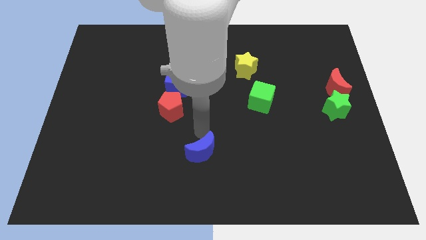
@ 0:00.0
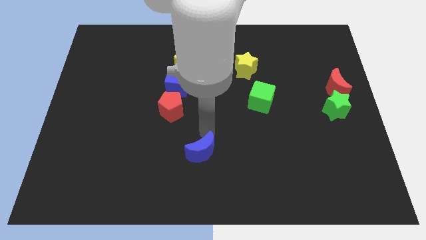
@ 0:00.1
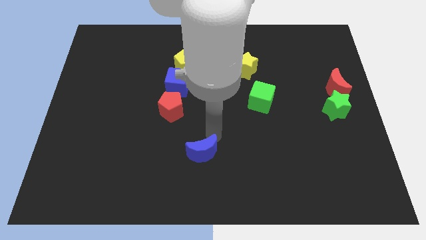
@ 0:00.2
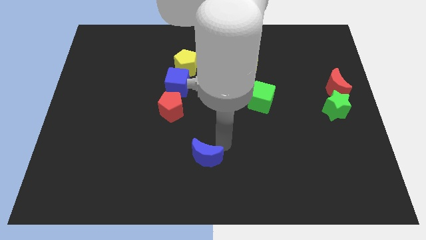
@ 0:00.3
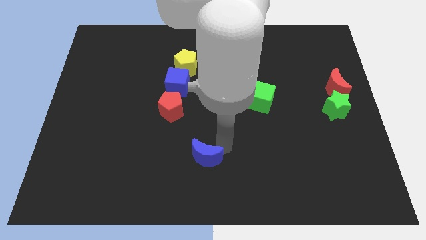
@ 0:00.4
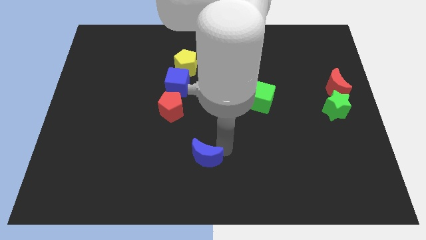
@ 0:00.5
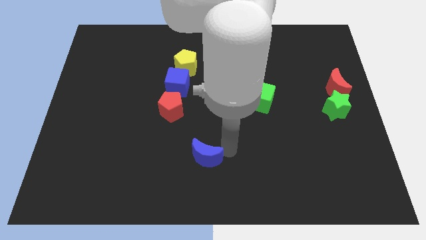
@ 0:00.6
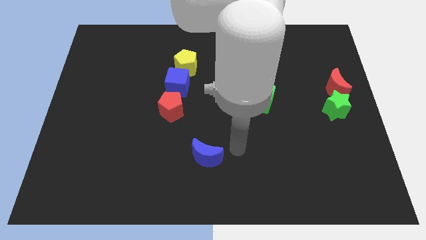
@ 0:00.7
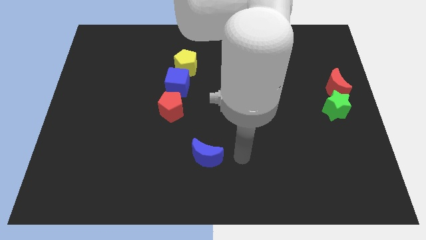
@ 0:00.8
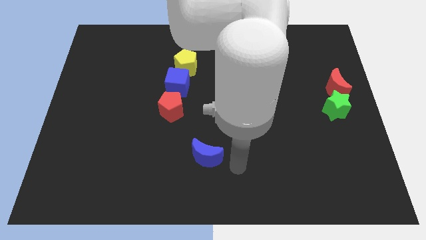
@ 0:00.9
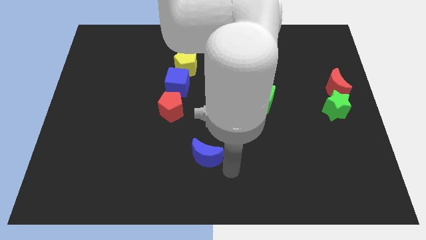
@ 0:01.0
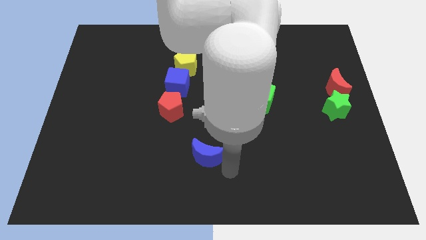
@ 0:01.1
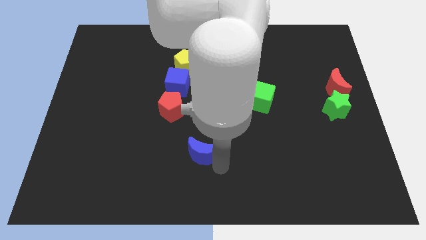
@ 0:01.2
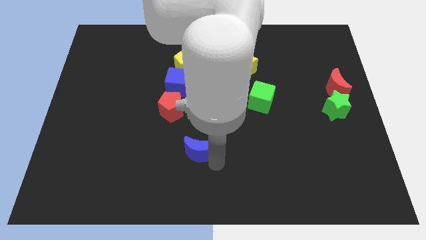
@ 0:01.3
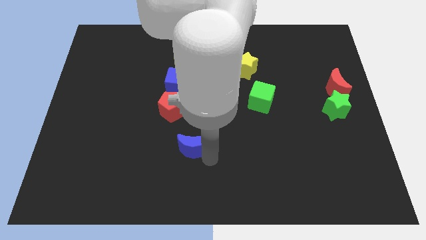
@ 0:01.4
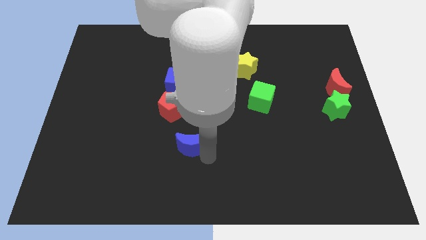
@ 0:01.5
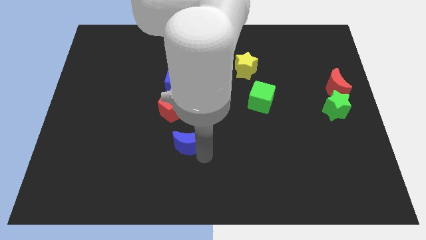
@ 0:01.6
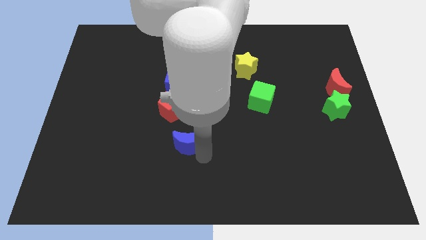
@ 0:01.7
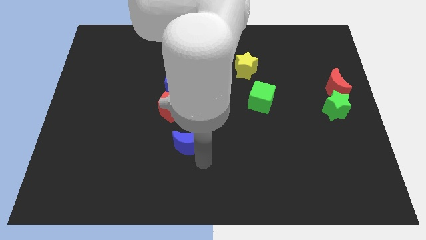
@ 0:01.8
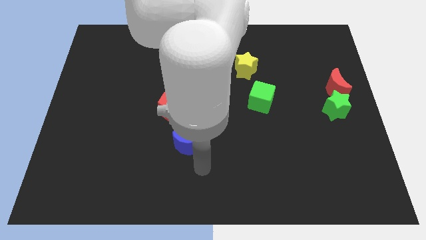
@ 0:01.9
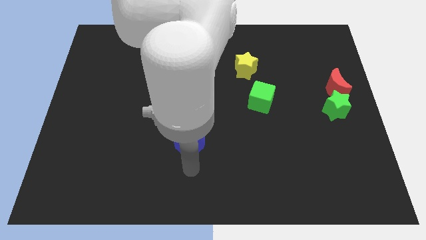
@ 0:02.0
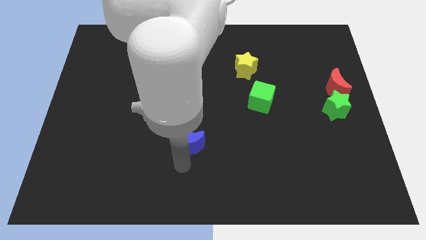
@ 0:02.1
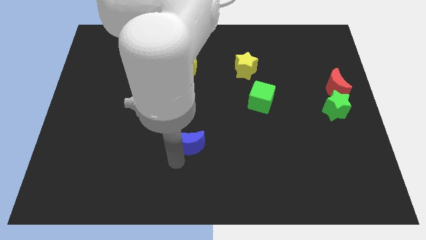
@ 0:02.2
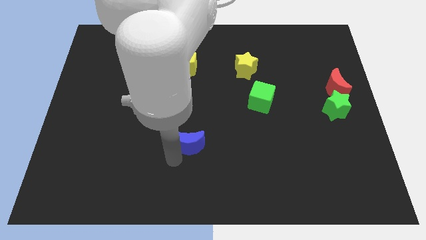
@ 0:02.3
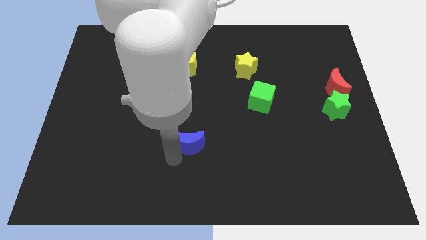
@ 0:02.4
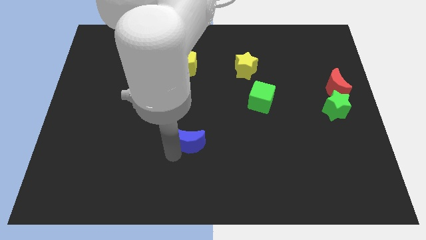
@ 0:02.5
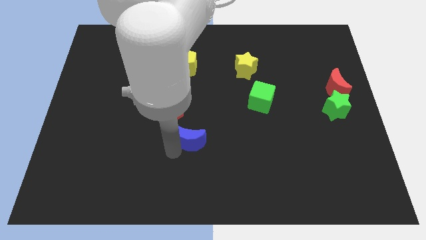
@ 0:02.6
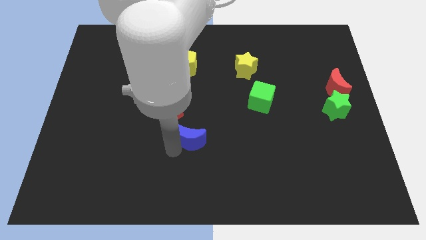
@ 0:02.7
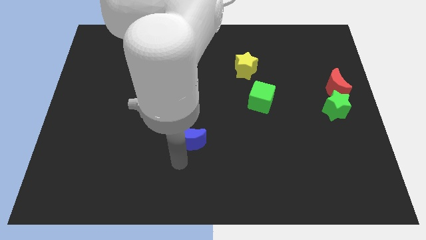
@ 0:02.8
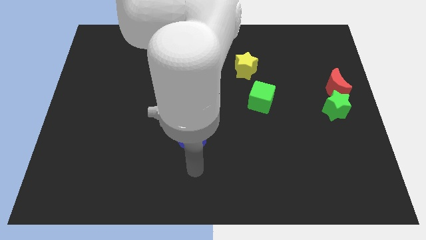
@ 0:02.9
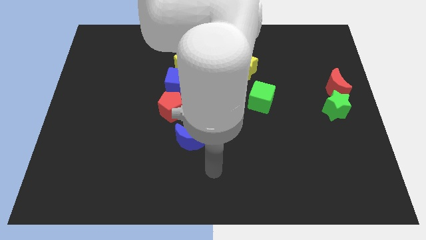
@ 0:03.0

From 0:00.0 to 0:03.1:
move the blue moon diagonal to the red pentagon

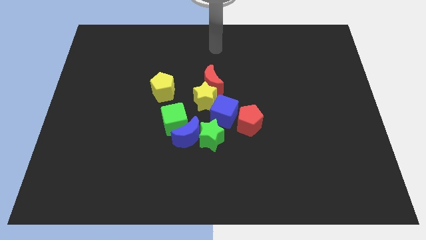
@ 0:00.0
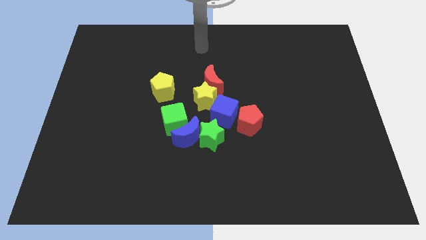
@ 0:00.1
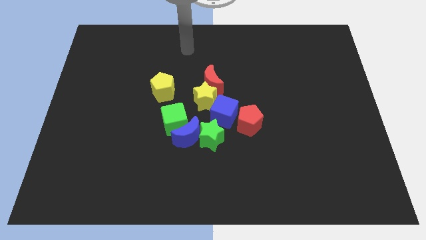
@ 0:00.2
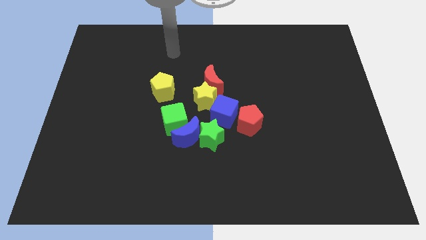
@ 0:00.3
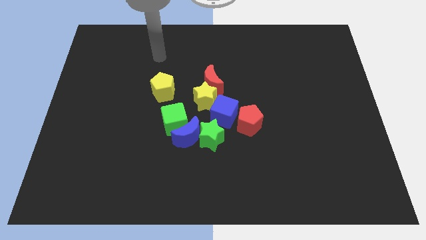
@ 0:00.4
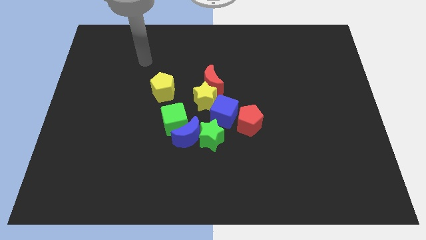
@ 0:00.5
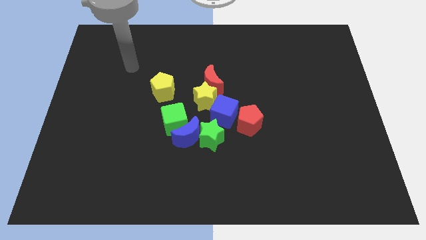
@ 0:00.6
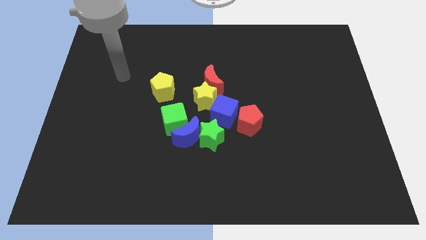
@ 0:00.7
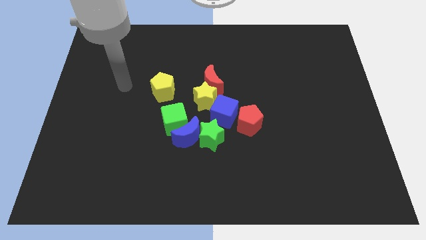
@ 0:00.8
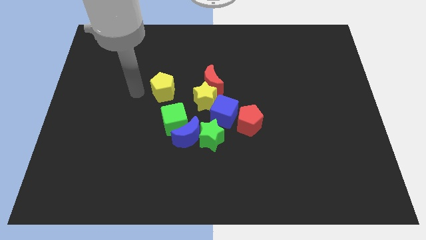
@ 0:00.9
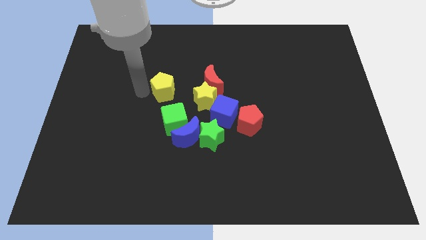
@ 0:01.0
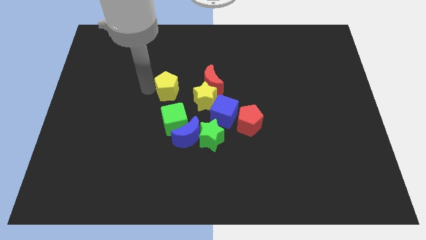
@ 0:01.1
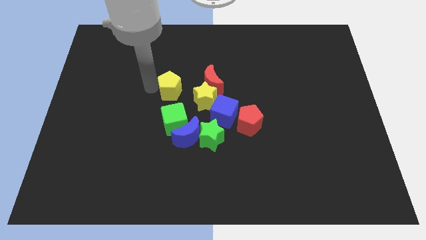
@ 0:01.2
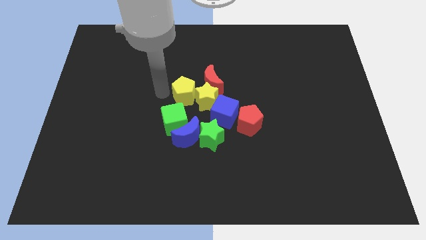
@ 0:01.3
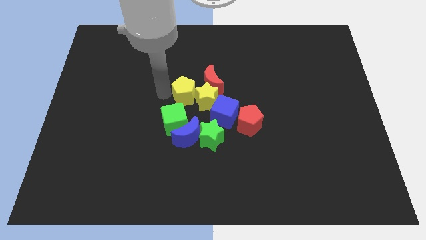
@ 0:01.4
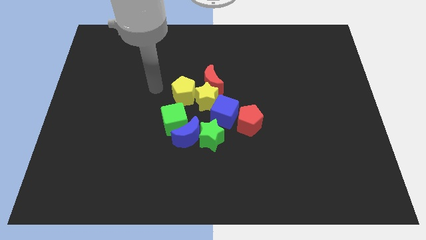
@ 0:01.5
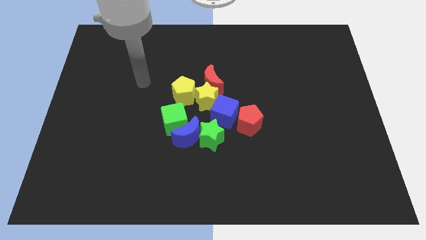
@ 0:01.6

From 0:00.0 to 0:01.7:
push the yellow pentagon into yellow star

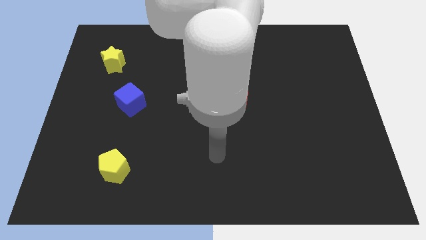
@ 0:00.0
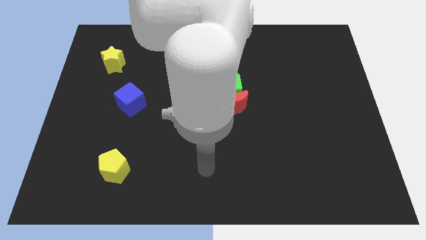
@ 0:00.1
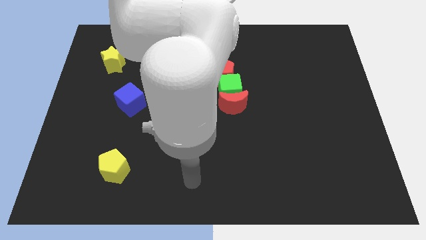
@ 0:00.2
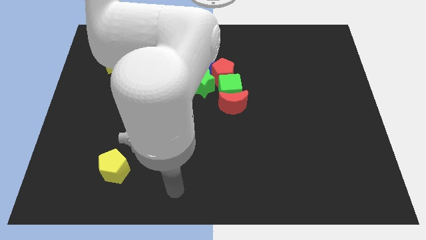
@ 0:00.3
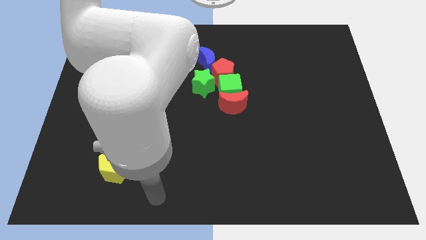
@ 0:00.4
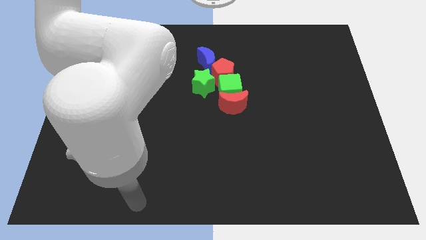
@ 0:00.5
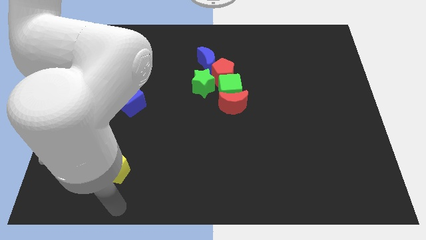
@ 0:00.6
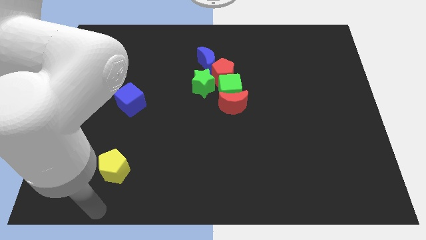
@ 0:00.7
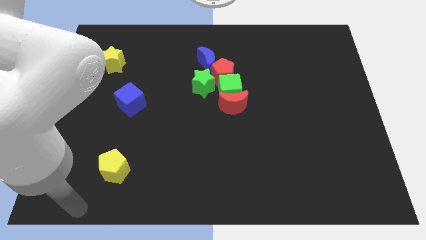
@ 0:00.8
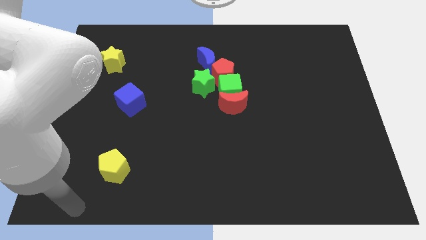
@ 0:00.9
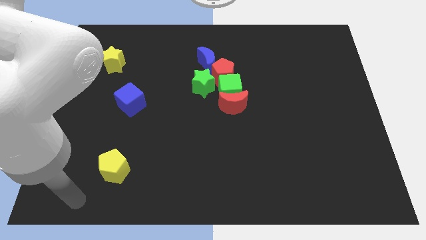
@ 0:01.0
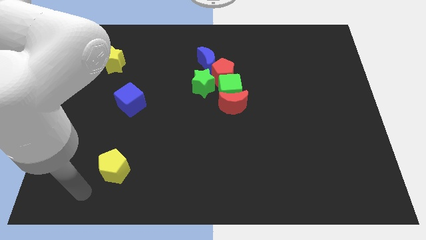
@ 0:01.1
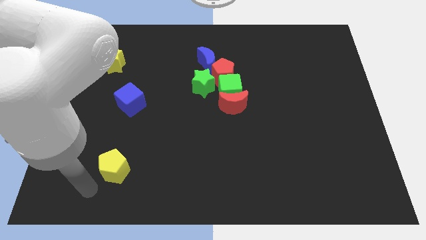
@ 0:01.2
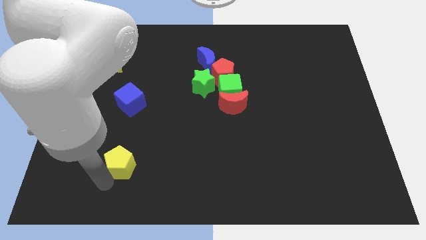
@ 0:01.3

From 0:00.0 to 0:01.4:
move your arm close to the yellow pentagon

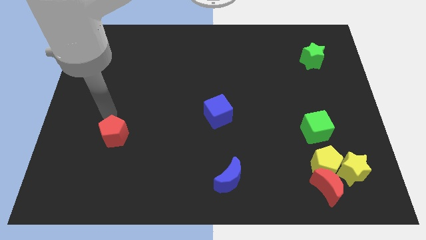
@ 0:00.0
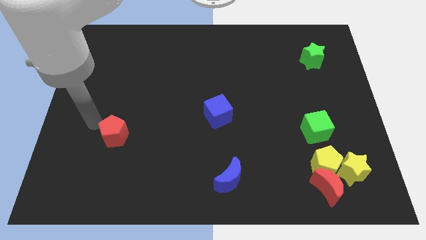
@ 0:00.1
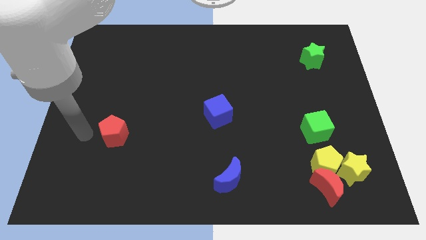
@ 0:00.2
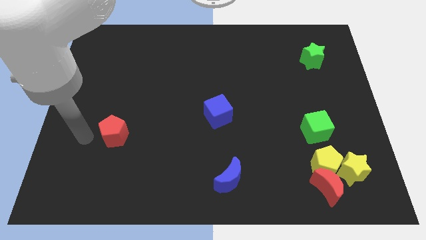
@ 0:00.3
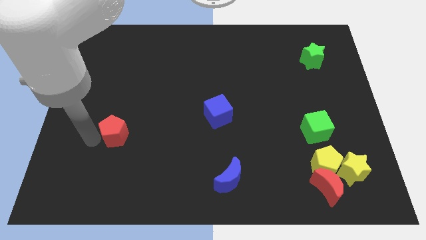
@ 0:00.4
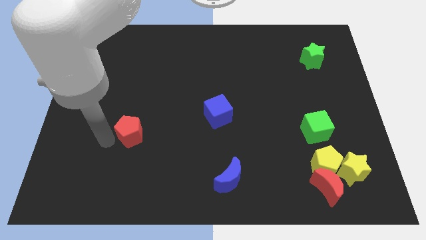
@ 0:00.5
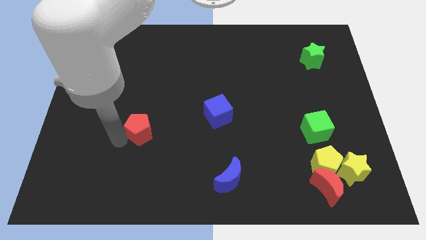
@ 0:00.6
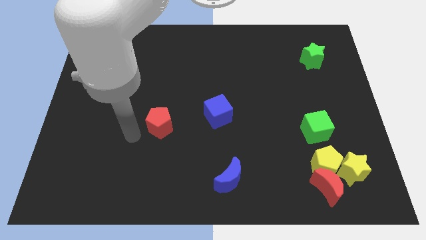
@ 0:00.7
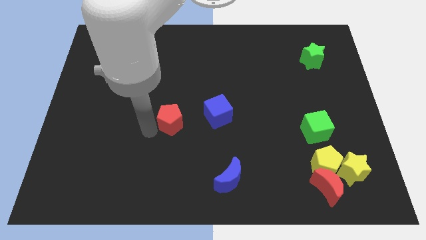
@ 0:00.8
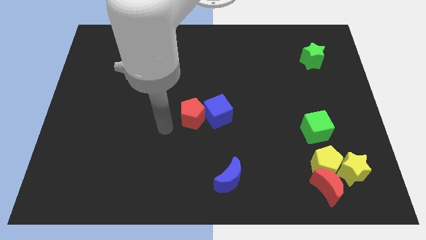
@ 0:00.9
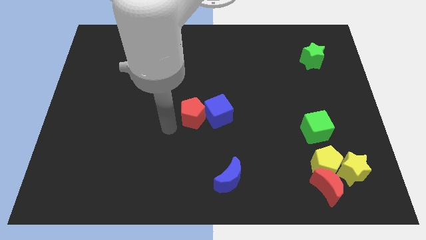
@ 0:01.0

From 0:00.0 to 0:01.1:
push red pentagon into the blue cube

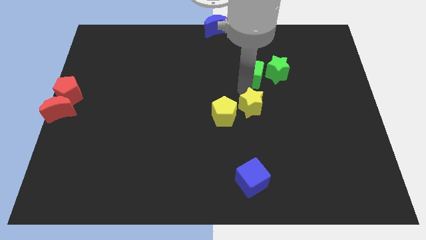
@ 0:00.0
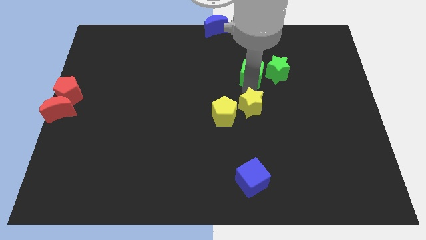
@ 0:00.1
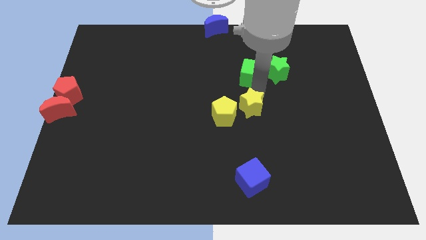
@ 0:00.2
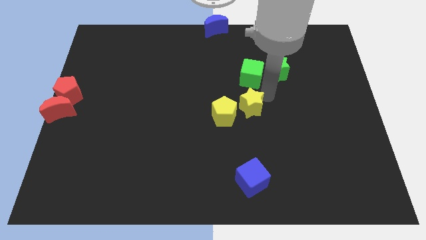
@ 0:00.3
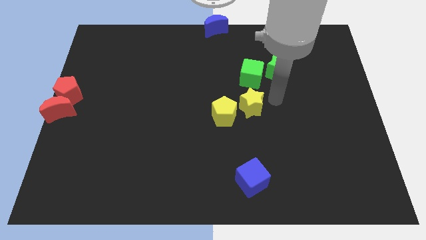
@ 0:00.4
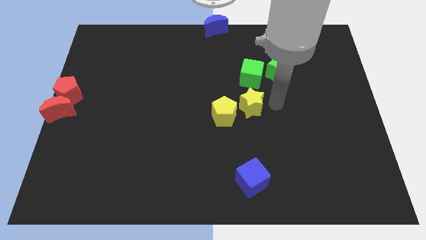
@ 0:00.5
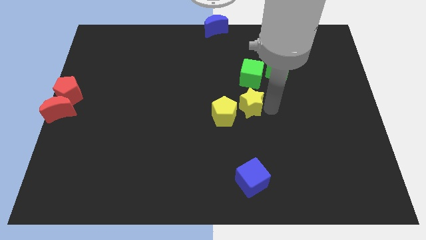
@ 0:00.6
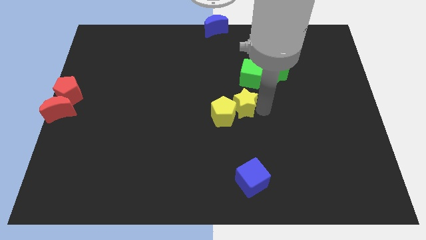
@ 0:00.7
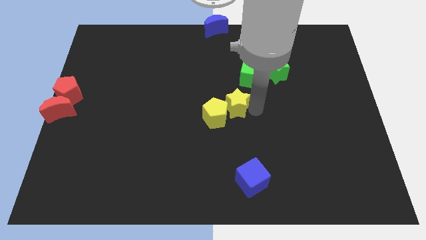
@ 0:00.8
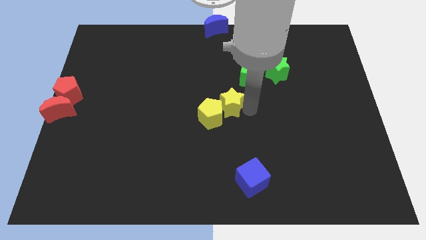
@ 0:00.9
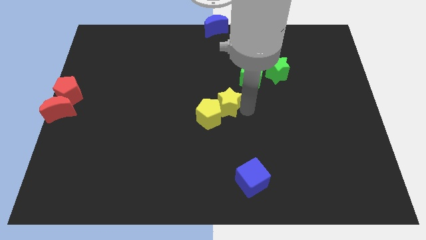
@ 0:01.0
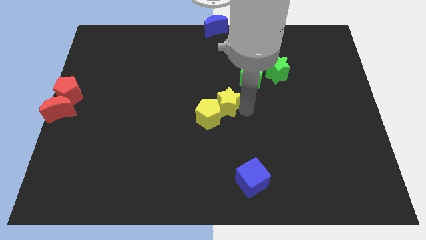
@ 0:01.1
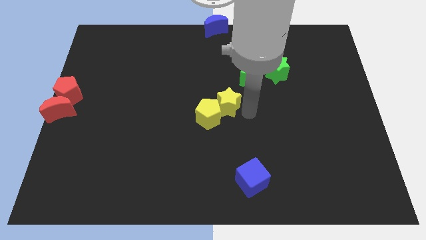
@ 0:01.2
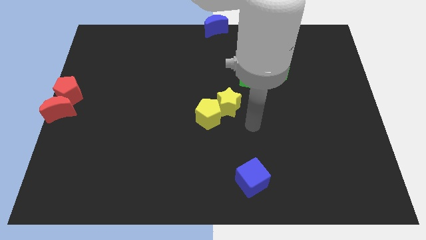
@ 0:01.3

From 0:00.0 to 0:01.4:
push yellow star slightly towards left side

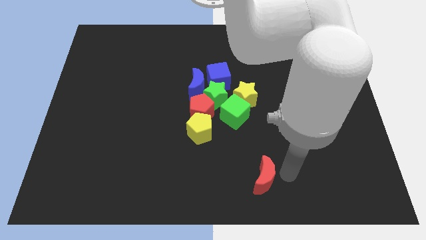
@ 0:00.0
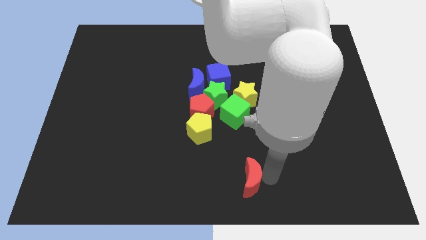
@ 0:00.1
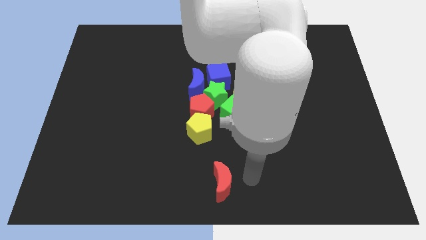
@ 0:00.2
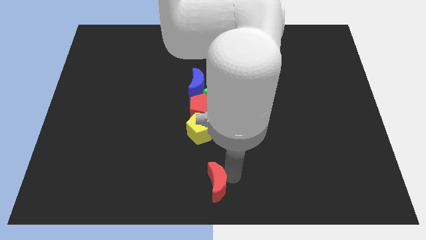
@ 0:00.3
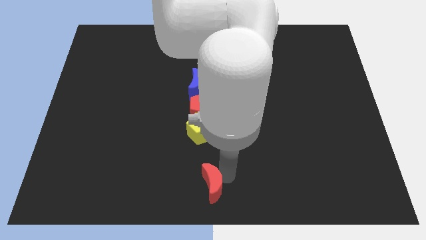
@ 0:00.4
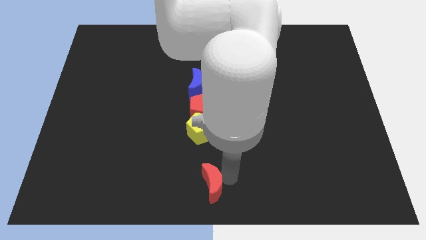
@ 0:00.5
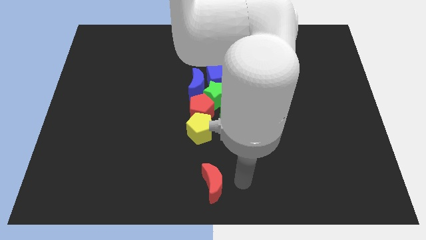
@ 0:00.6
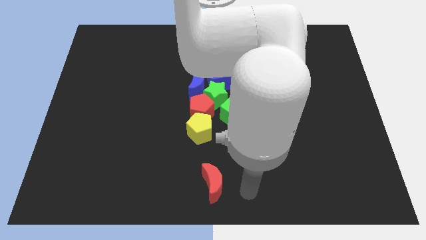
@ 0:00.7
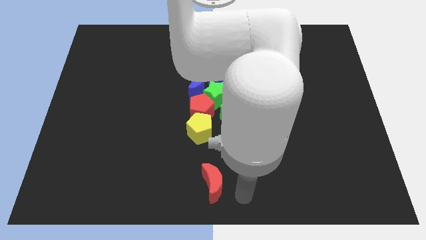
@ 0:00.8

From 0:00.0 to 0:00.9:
move the red moon slightly to the left
